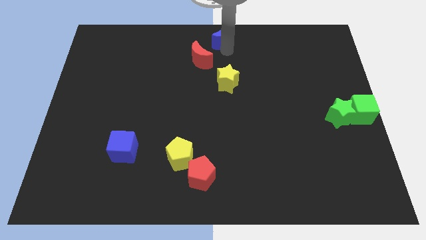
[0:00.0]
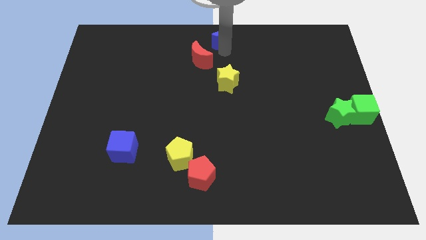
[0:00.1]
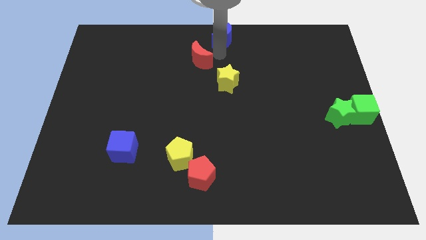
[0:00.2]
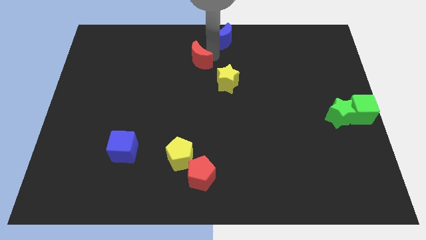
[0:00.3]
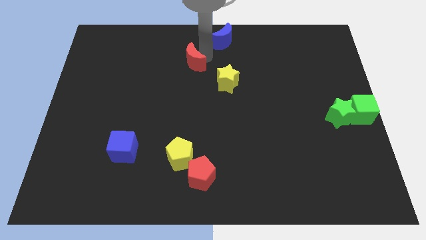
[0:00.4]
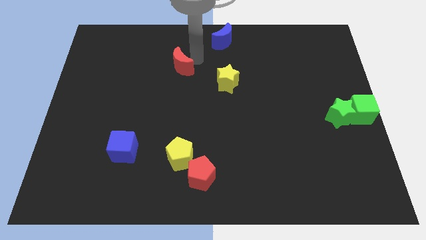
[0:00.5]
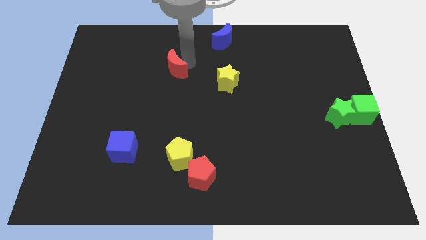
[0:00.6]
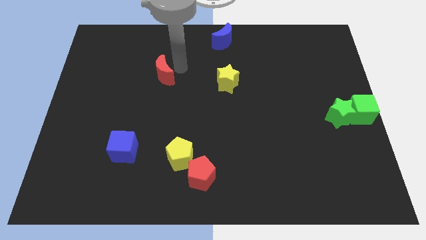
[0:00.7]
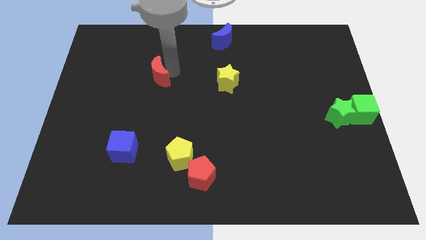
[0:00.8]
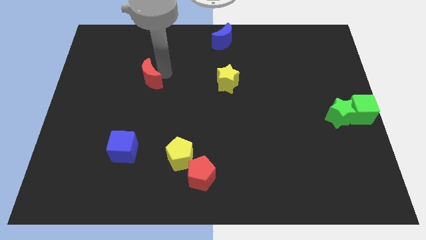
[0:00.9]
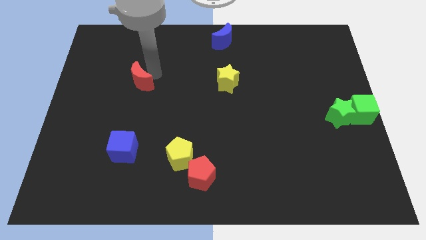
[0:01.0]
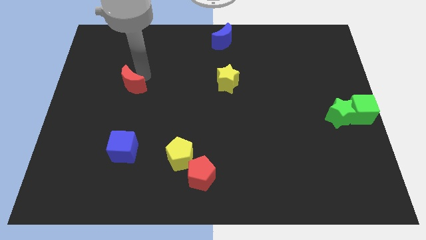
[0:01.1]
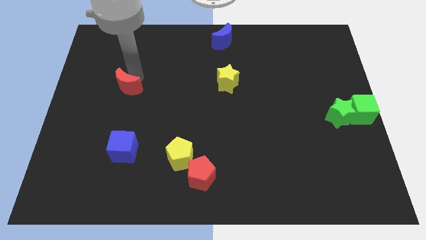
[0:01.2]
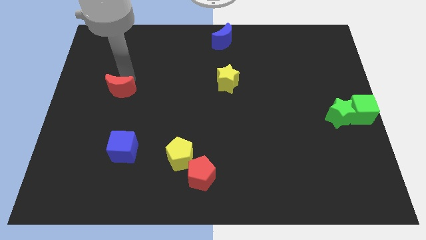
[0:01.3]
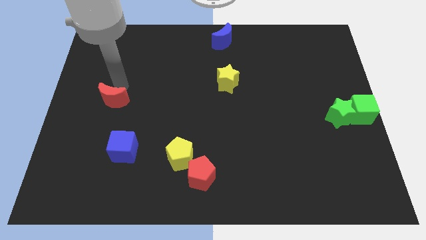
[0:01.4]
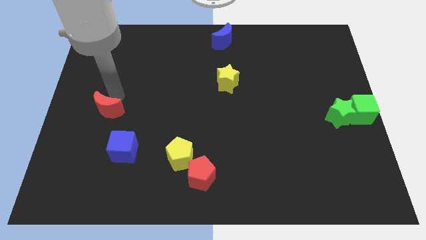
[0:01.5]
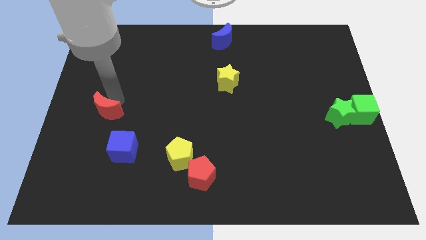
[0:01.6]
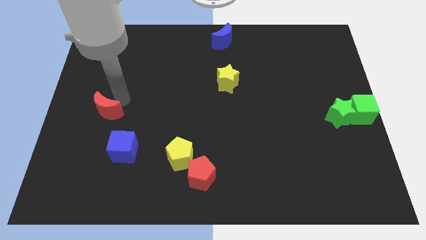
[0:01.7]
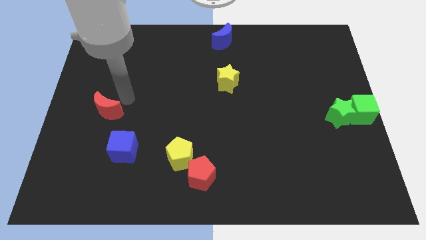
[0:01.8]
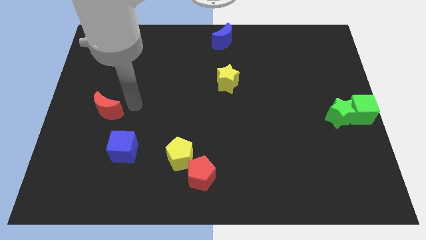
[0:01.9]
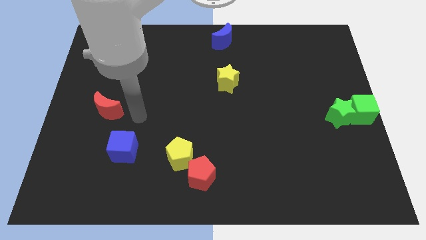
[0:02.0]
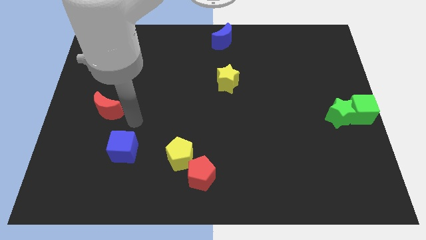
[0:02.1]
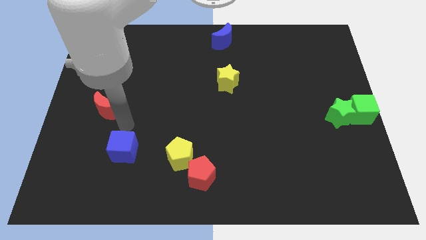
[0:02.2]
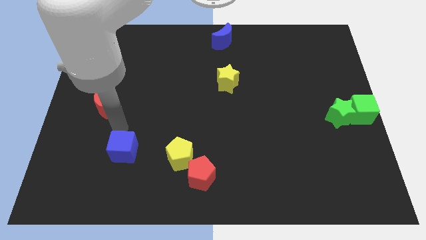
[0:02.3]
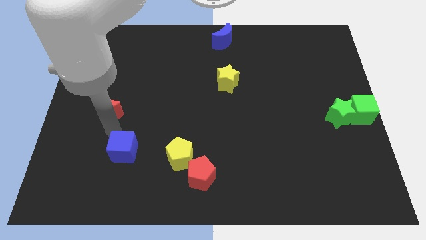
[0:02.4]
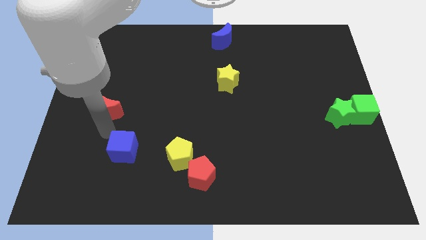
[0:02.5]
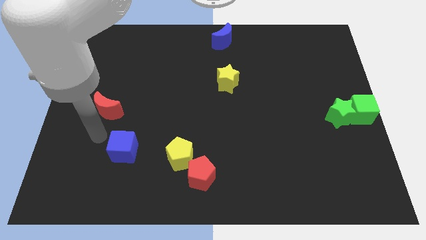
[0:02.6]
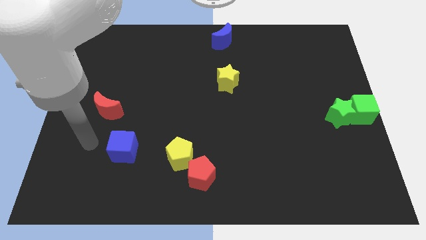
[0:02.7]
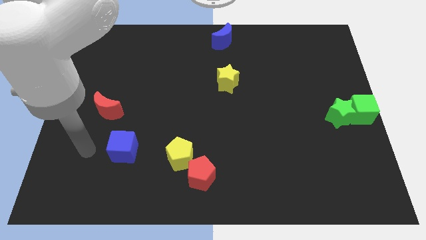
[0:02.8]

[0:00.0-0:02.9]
move the red crescent diagonally above the blue cube

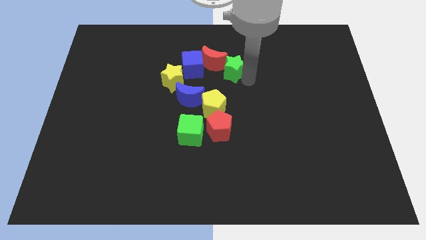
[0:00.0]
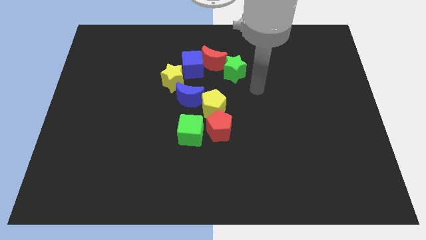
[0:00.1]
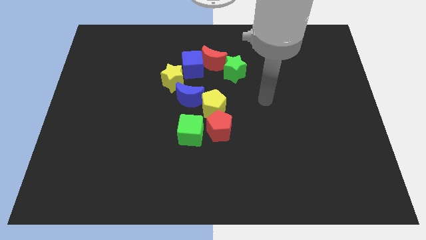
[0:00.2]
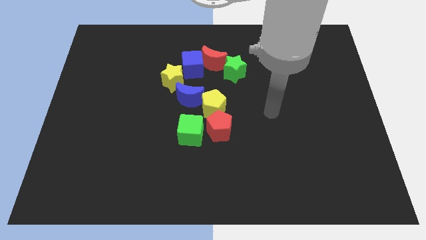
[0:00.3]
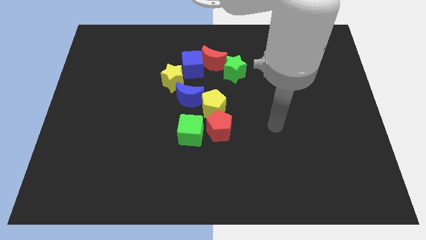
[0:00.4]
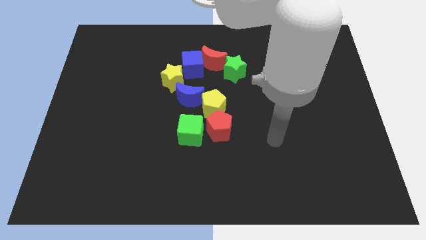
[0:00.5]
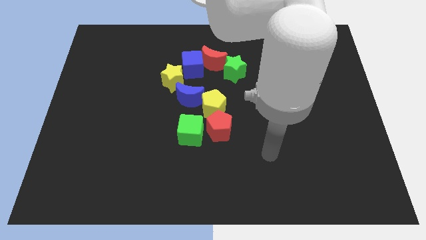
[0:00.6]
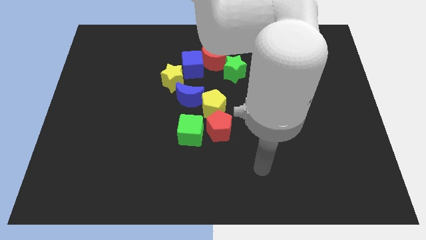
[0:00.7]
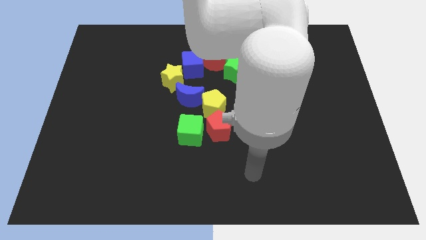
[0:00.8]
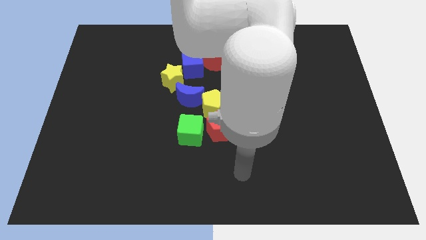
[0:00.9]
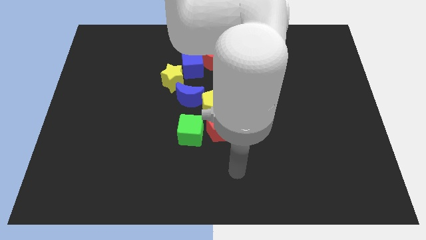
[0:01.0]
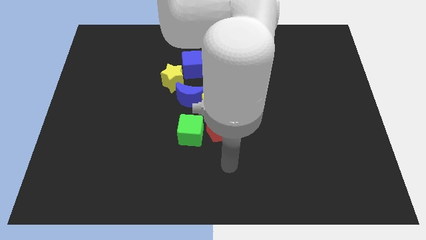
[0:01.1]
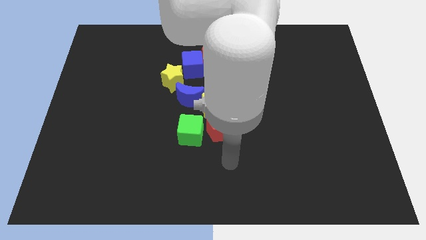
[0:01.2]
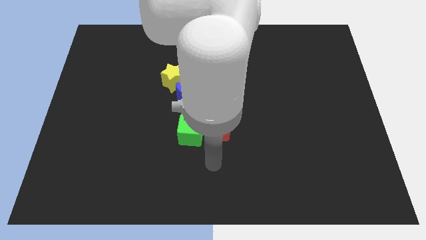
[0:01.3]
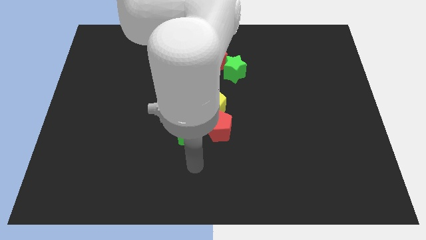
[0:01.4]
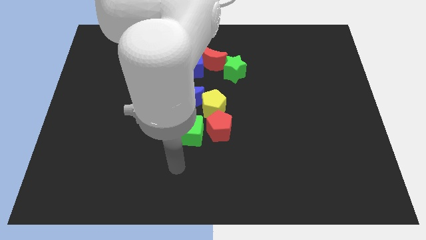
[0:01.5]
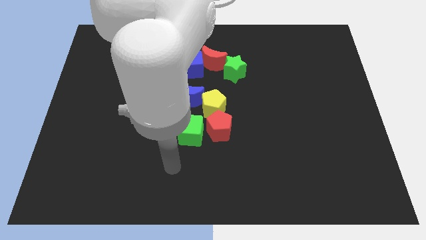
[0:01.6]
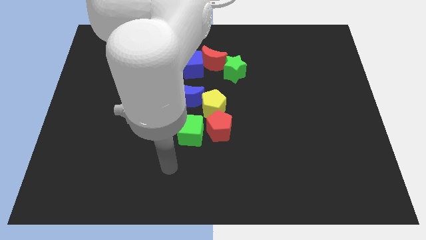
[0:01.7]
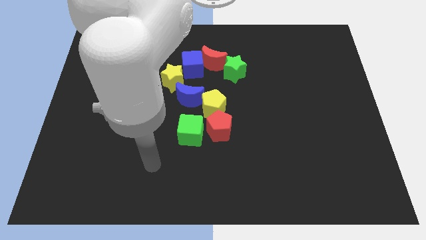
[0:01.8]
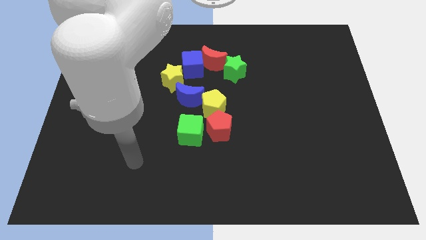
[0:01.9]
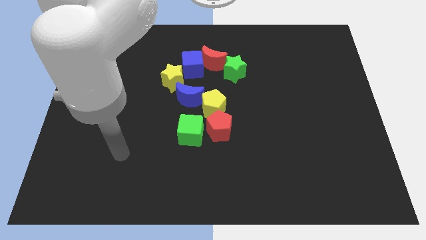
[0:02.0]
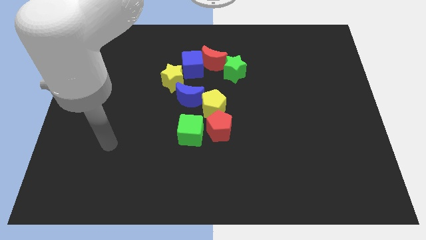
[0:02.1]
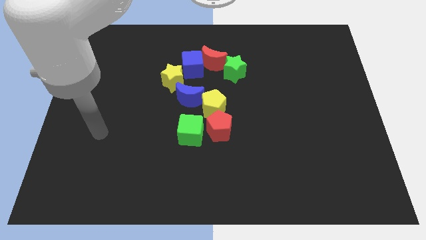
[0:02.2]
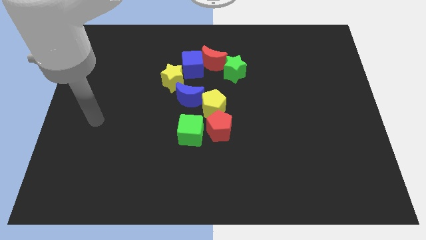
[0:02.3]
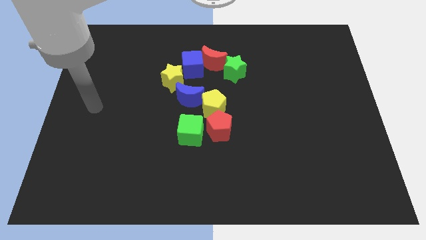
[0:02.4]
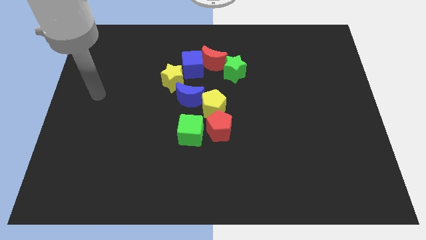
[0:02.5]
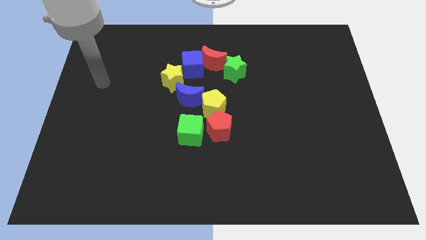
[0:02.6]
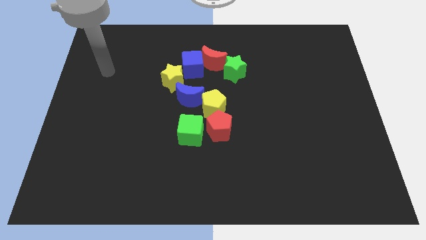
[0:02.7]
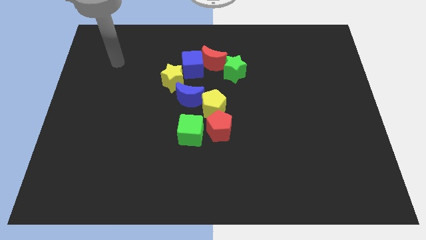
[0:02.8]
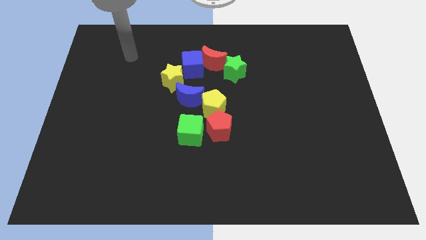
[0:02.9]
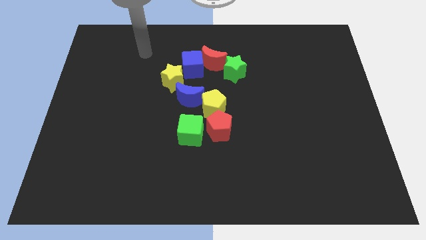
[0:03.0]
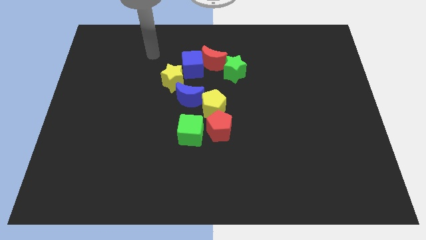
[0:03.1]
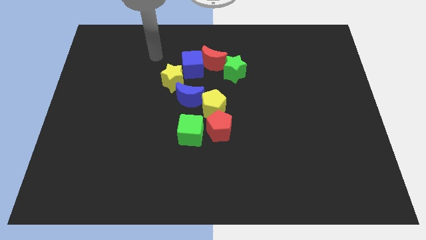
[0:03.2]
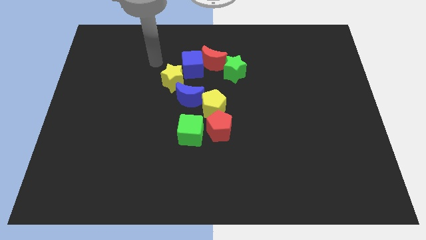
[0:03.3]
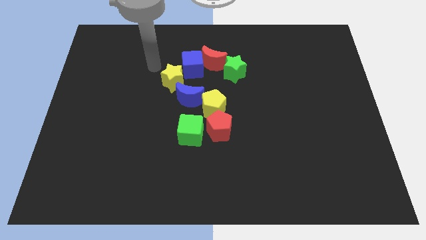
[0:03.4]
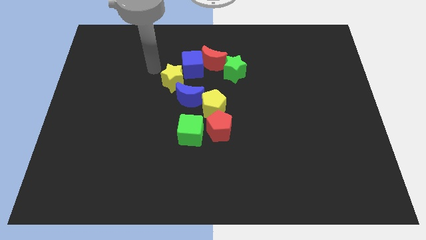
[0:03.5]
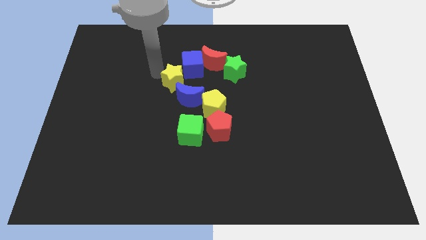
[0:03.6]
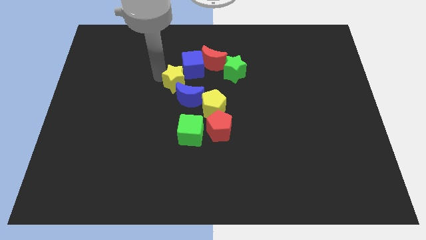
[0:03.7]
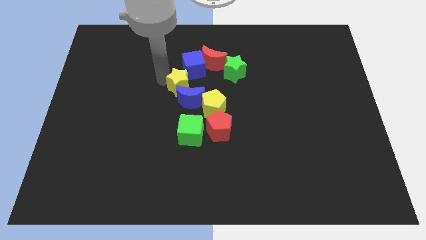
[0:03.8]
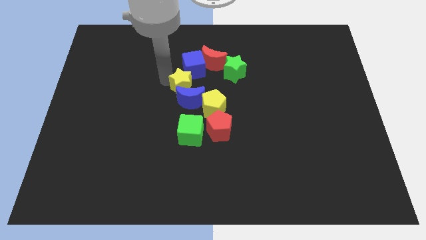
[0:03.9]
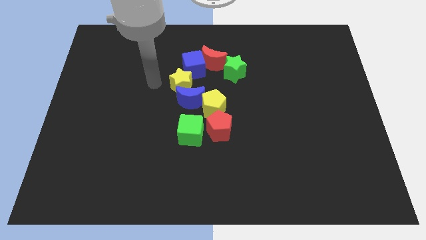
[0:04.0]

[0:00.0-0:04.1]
push the yellow star into the blue crescent

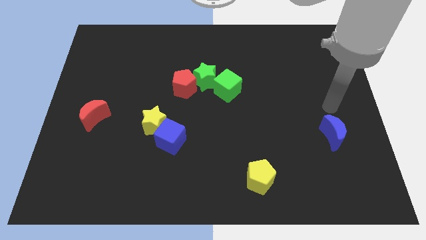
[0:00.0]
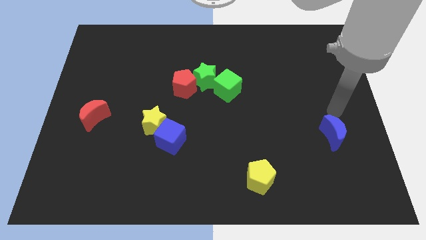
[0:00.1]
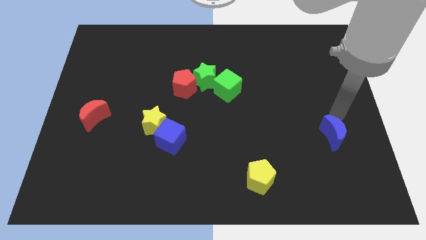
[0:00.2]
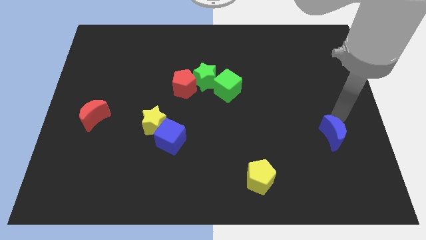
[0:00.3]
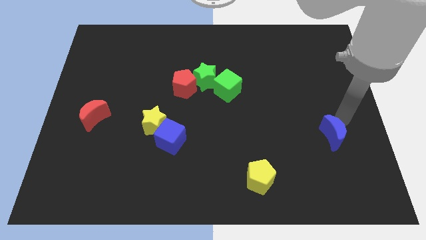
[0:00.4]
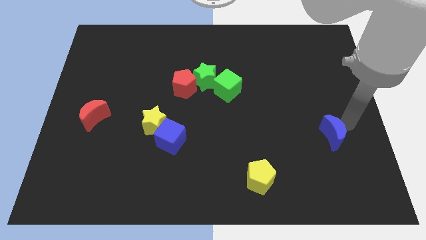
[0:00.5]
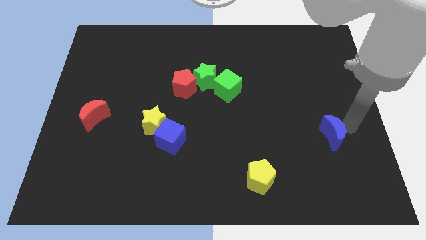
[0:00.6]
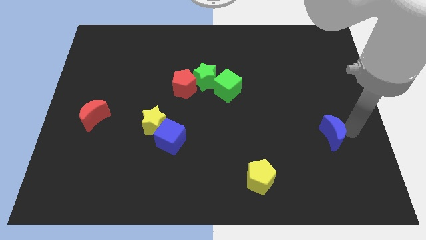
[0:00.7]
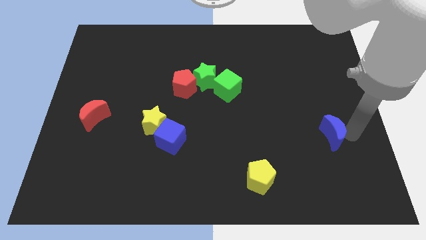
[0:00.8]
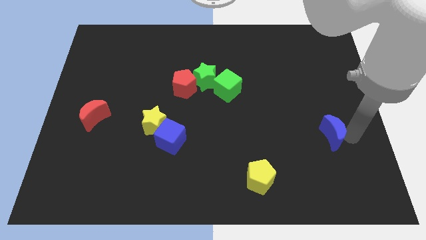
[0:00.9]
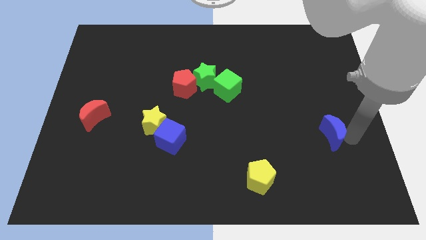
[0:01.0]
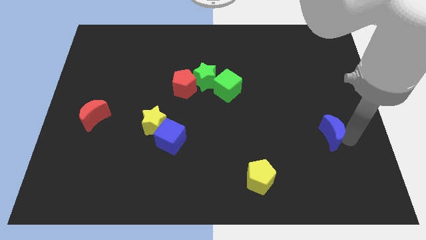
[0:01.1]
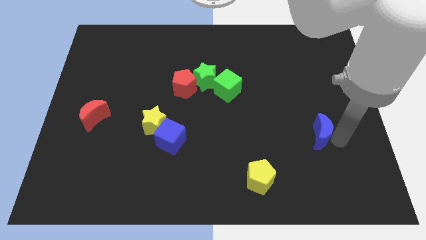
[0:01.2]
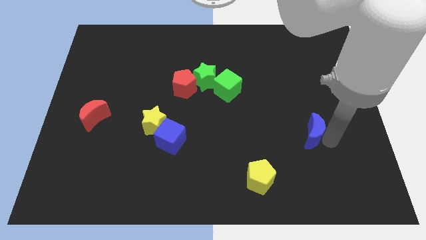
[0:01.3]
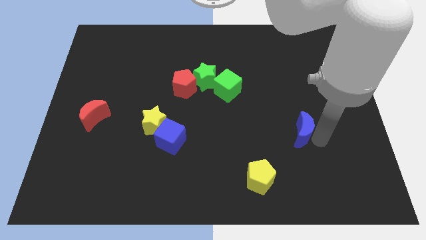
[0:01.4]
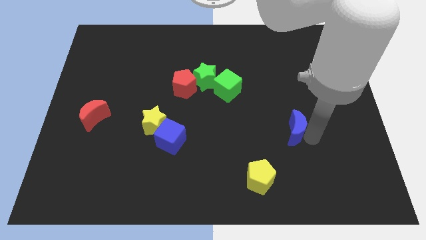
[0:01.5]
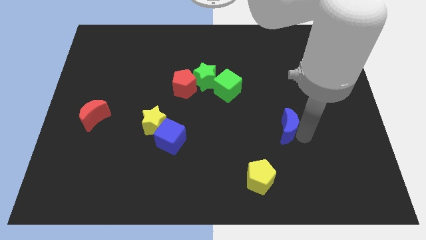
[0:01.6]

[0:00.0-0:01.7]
slide the blue moon slightly to the left side of the board

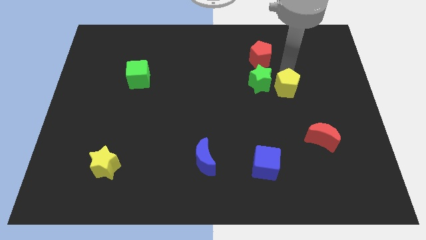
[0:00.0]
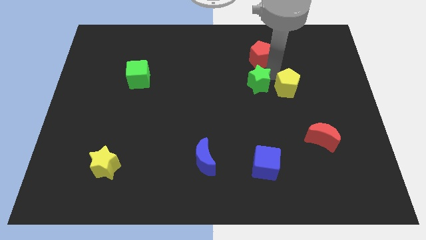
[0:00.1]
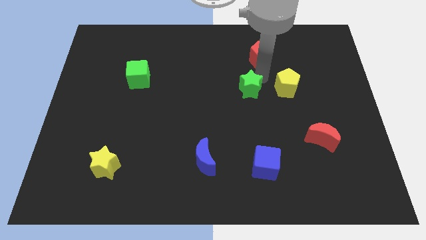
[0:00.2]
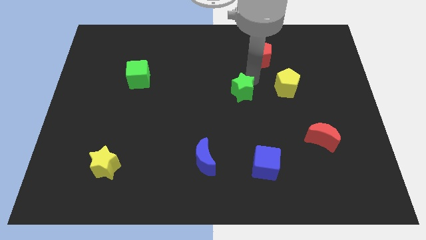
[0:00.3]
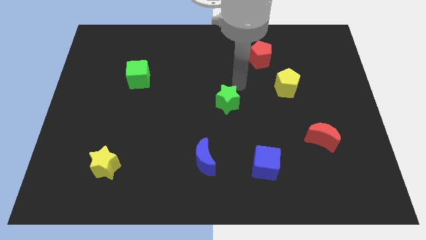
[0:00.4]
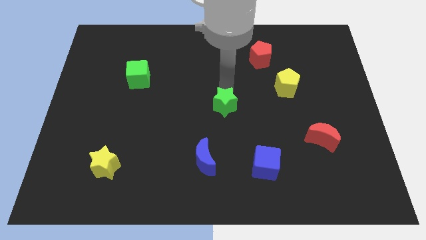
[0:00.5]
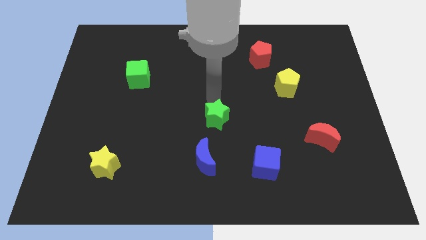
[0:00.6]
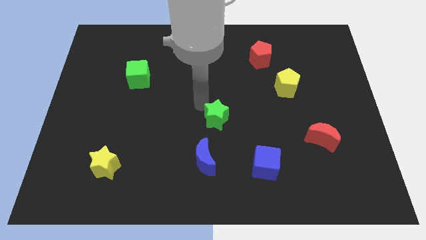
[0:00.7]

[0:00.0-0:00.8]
push green star diagonally below
